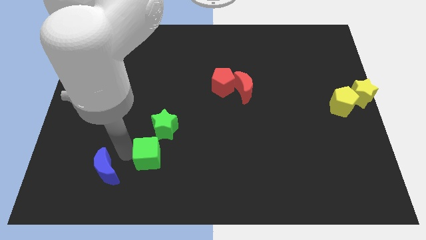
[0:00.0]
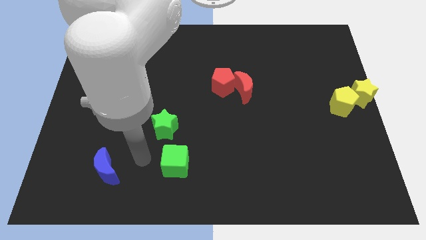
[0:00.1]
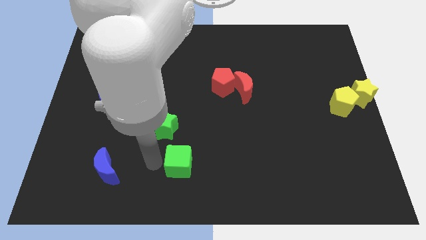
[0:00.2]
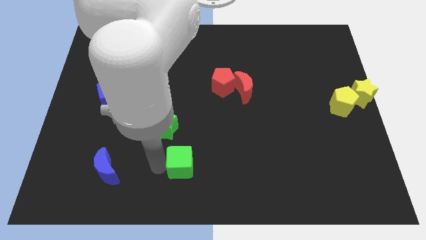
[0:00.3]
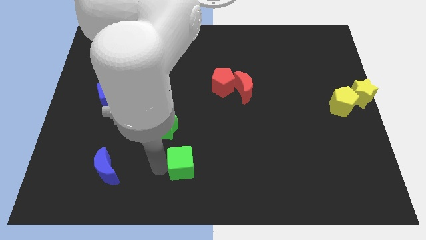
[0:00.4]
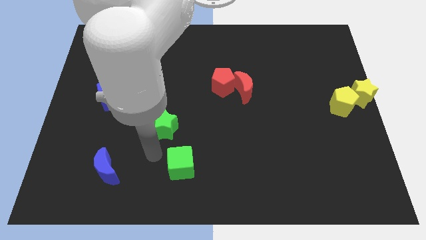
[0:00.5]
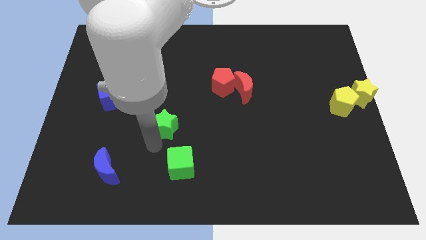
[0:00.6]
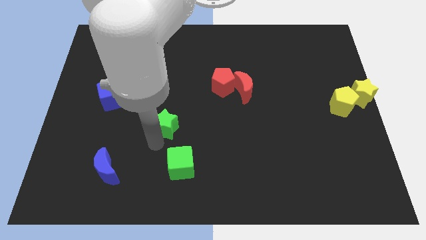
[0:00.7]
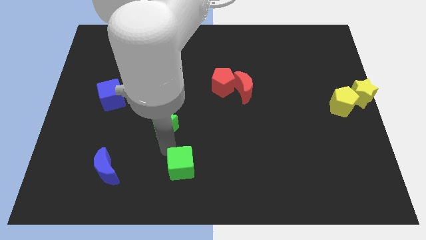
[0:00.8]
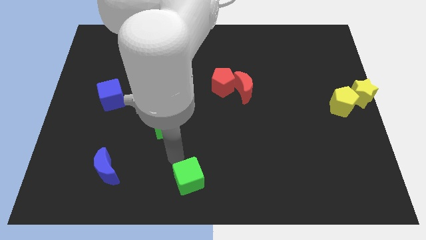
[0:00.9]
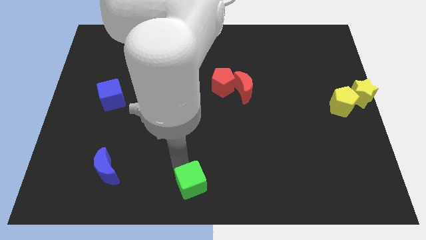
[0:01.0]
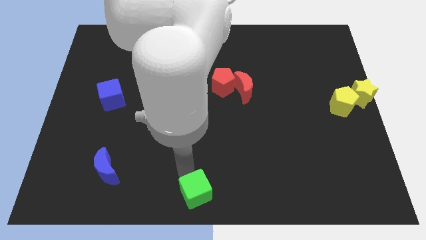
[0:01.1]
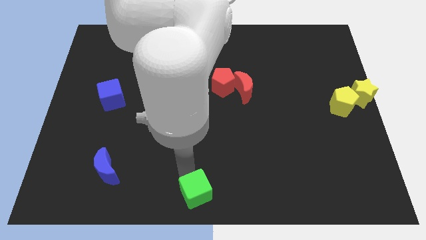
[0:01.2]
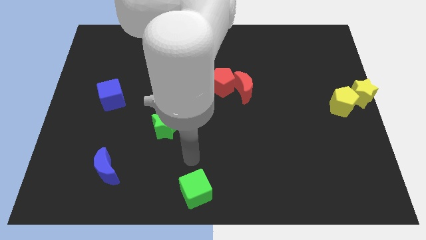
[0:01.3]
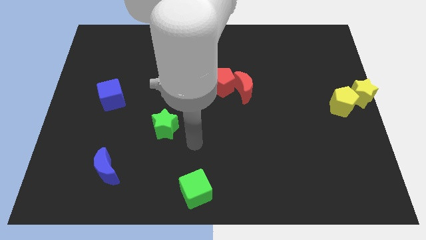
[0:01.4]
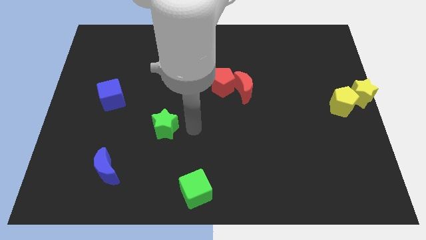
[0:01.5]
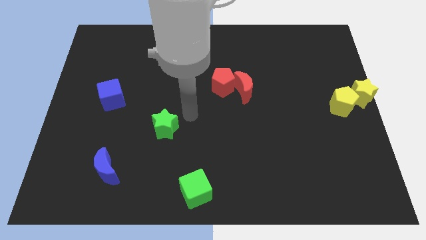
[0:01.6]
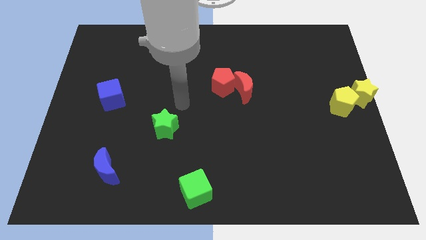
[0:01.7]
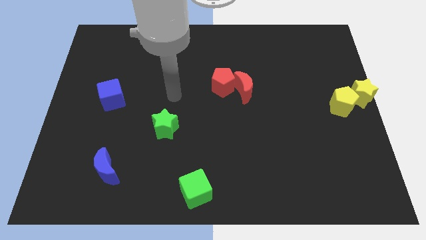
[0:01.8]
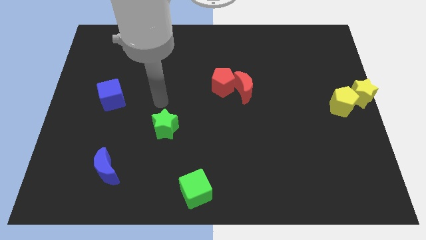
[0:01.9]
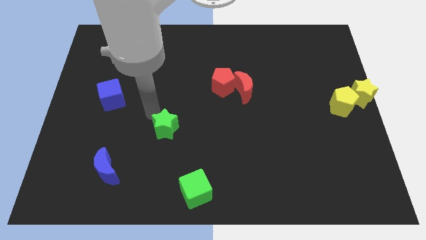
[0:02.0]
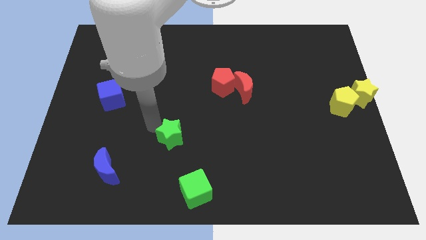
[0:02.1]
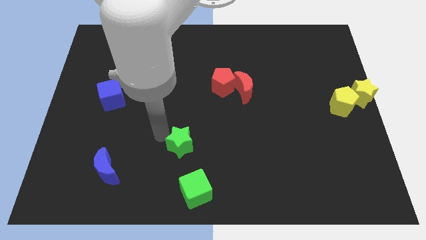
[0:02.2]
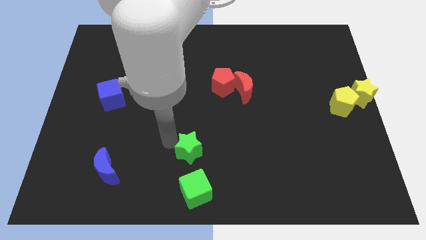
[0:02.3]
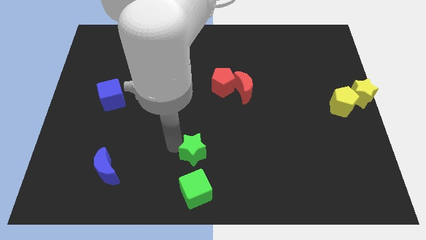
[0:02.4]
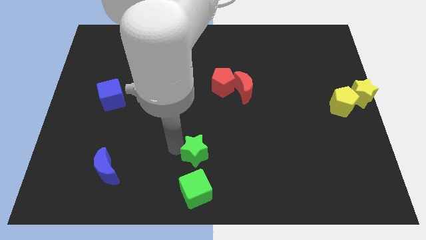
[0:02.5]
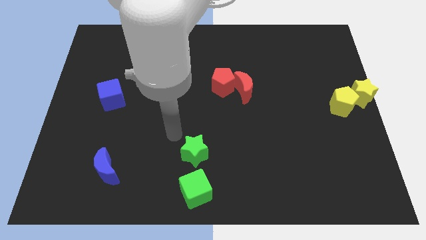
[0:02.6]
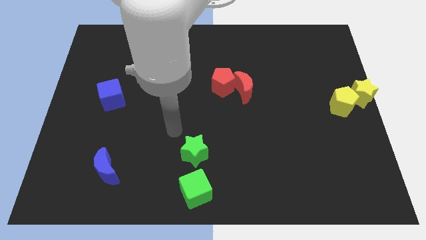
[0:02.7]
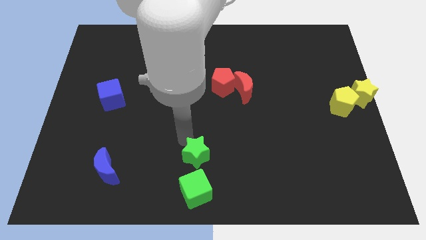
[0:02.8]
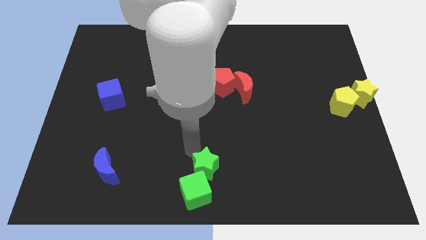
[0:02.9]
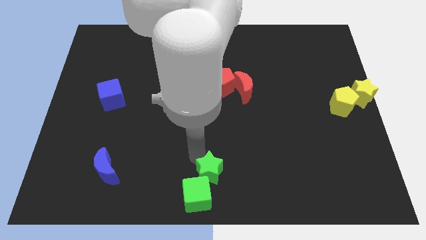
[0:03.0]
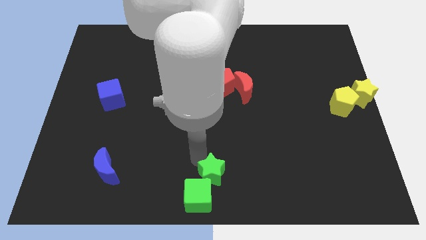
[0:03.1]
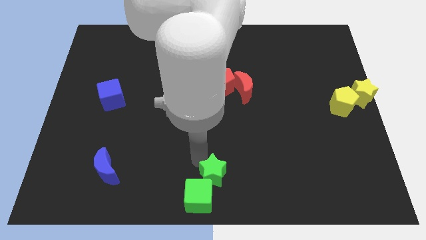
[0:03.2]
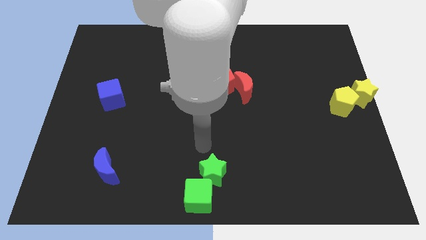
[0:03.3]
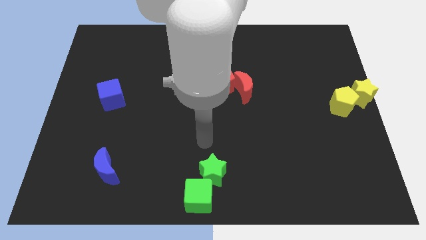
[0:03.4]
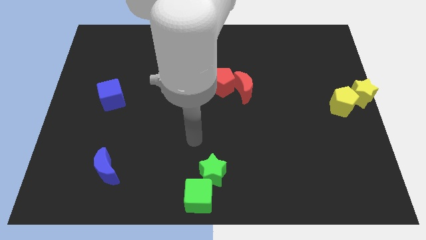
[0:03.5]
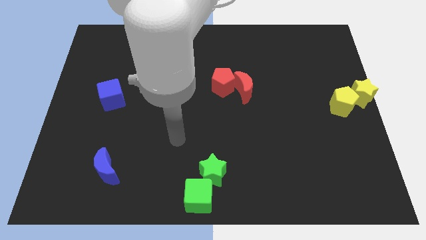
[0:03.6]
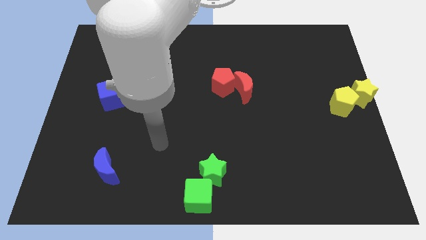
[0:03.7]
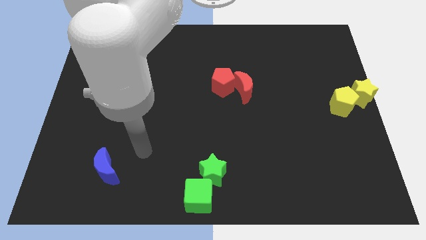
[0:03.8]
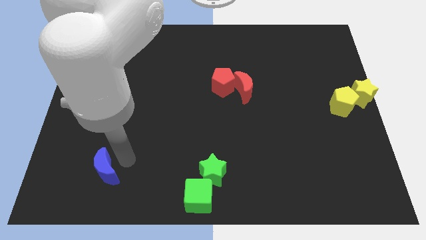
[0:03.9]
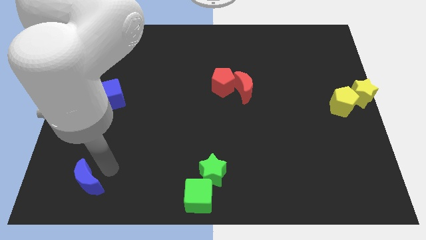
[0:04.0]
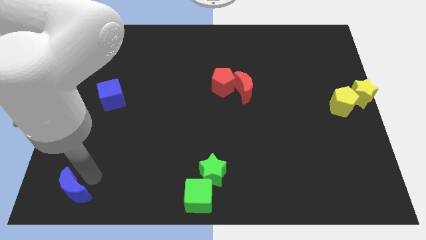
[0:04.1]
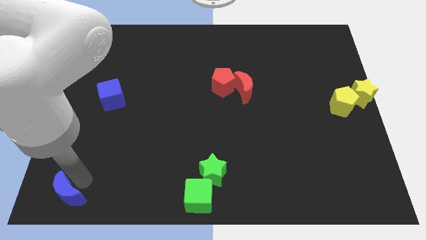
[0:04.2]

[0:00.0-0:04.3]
move the green blocks to the bottom center of the board

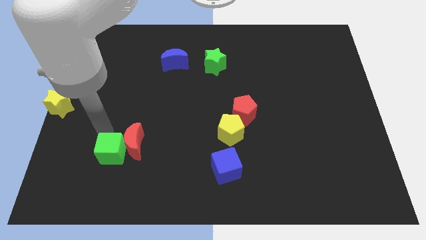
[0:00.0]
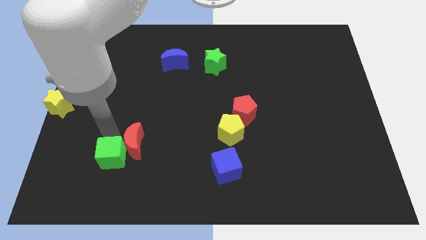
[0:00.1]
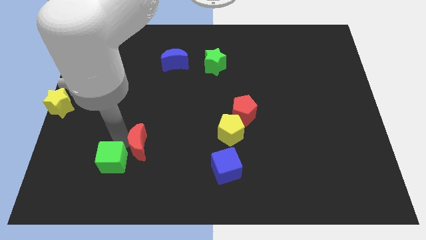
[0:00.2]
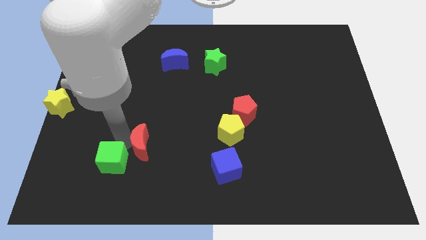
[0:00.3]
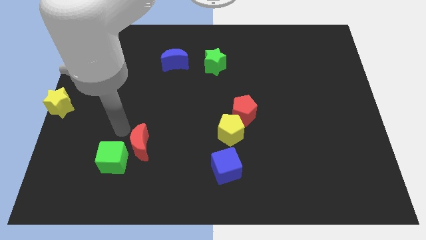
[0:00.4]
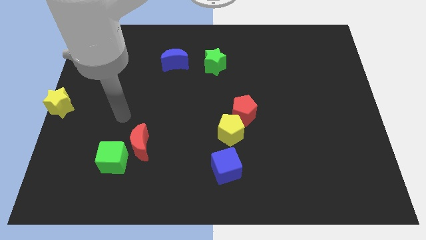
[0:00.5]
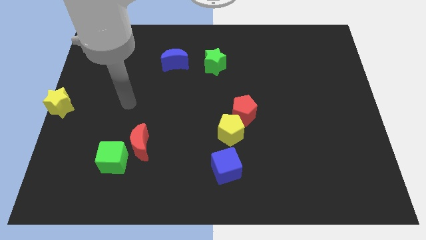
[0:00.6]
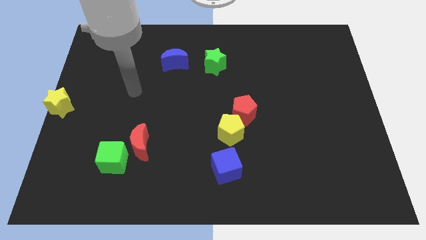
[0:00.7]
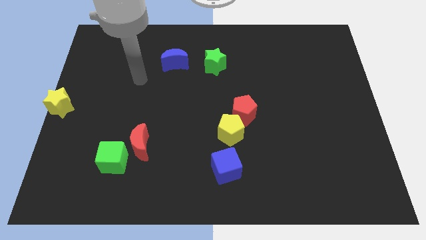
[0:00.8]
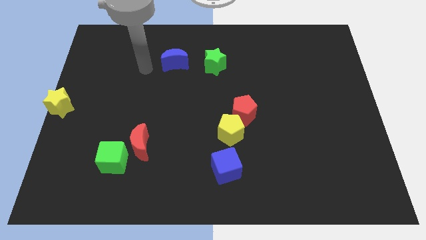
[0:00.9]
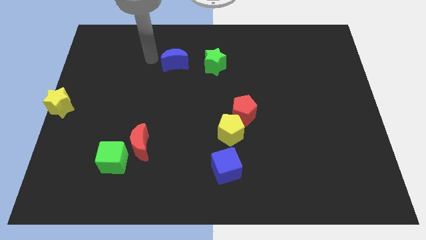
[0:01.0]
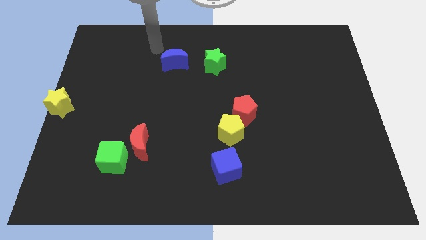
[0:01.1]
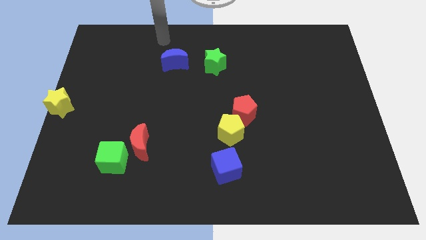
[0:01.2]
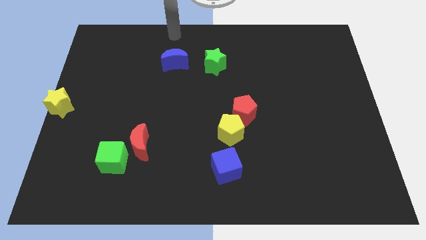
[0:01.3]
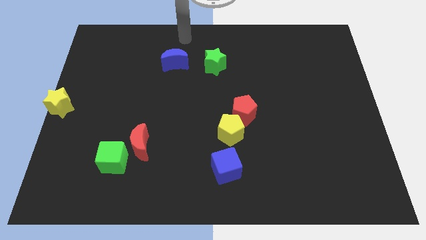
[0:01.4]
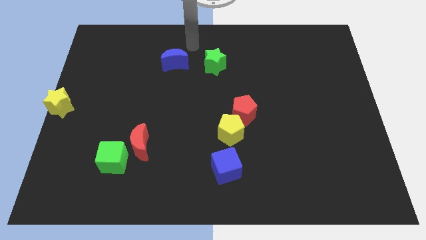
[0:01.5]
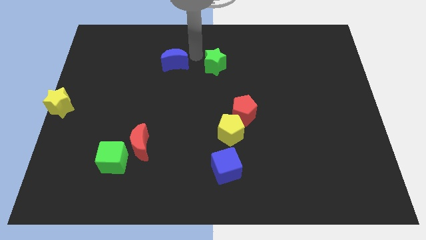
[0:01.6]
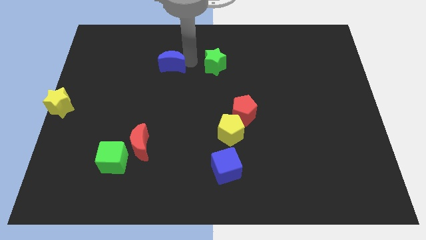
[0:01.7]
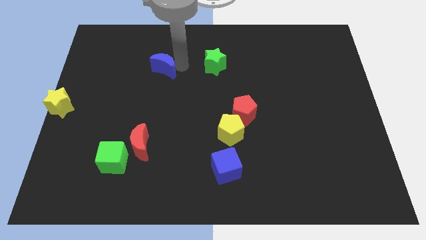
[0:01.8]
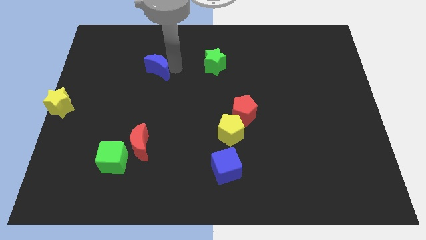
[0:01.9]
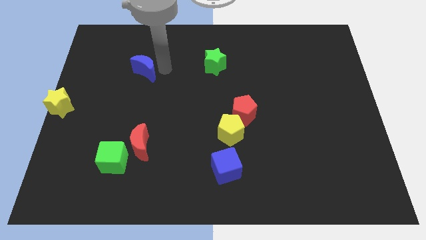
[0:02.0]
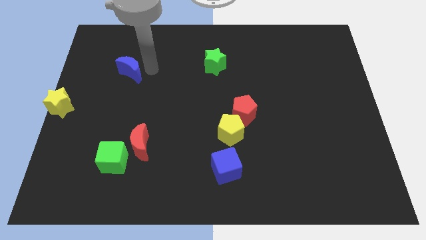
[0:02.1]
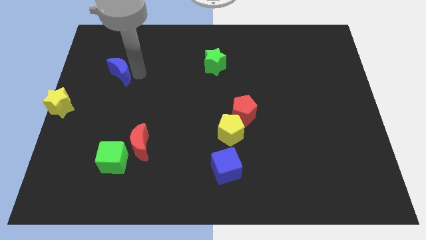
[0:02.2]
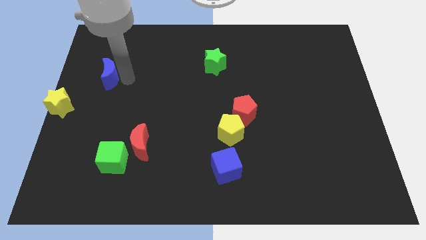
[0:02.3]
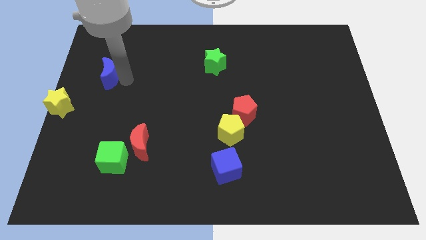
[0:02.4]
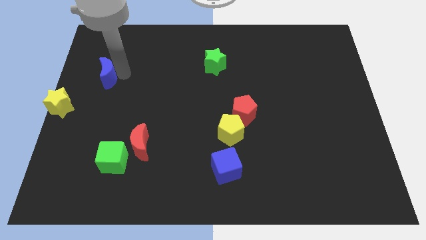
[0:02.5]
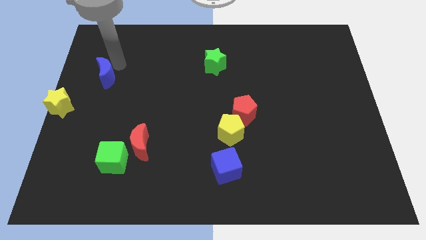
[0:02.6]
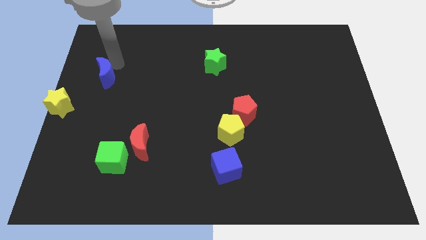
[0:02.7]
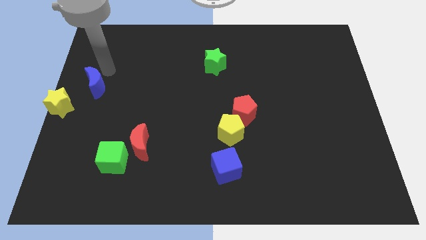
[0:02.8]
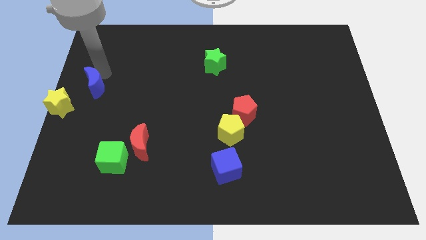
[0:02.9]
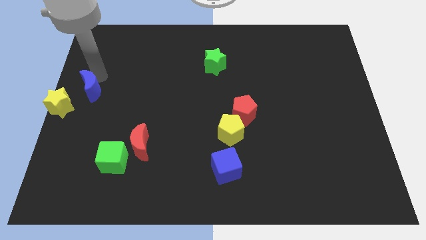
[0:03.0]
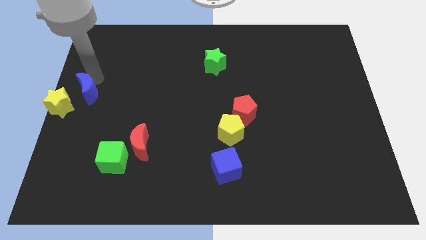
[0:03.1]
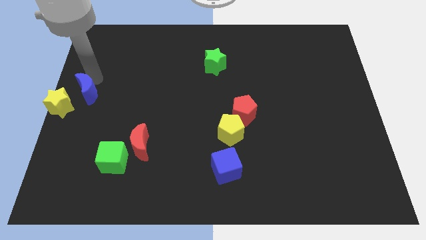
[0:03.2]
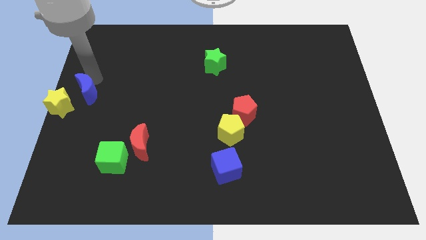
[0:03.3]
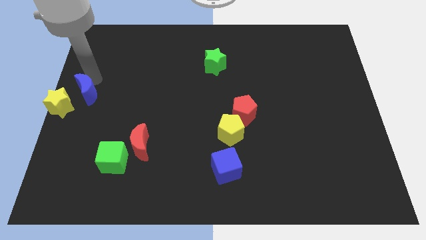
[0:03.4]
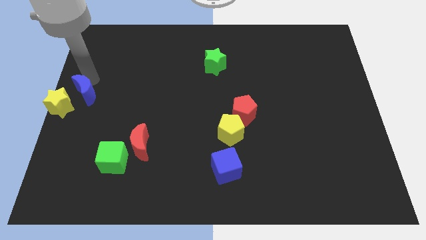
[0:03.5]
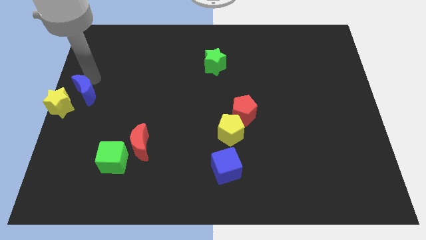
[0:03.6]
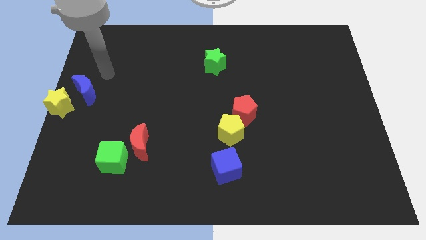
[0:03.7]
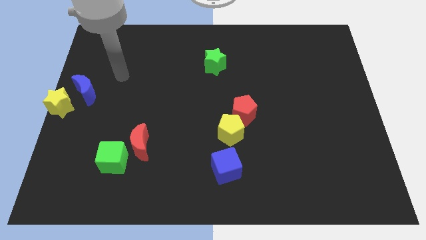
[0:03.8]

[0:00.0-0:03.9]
move the blue moon diagonal top right to yellow star

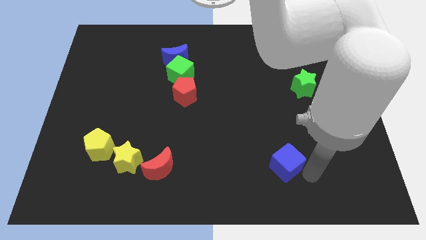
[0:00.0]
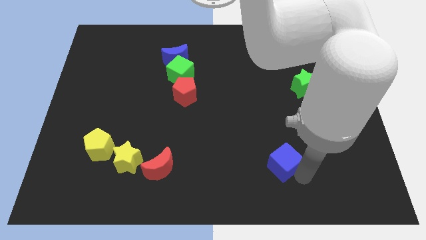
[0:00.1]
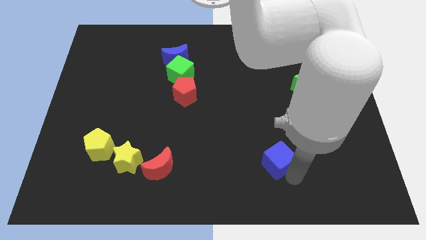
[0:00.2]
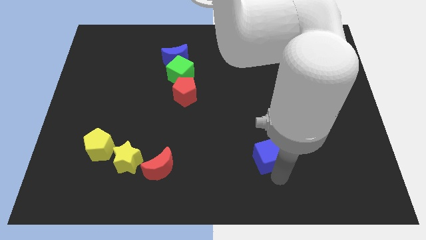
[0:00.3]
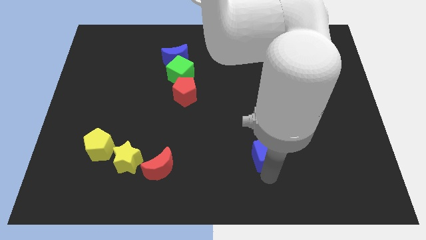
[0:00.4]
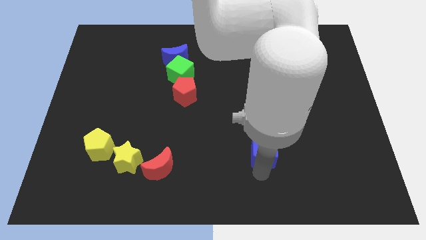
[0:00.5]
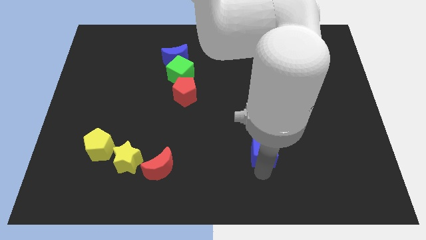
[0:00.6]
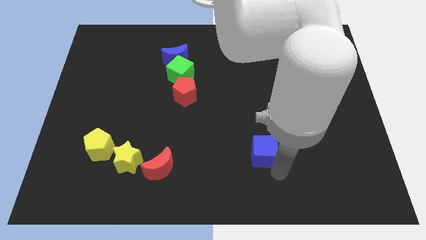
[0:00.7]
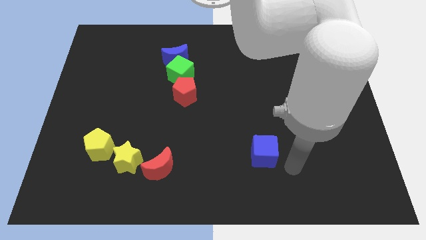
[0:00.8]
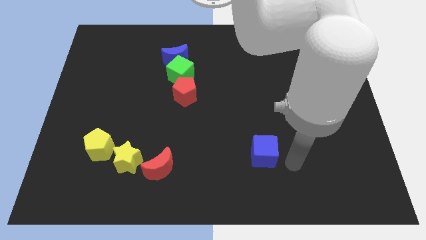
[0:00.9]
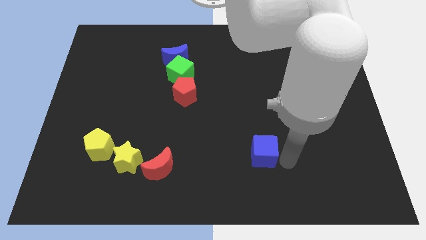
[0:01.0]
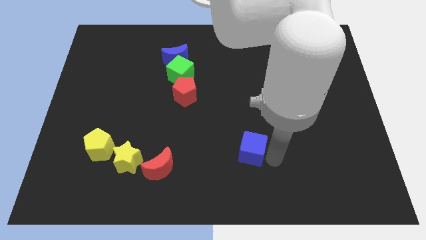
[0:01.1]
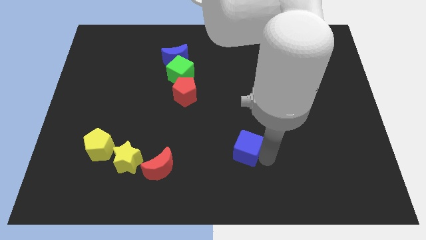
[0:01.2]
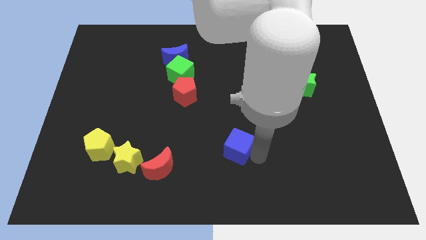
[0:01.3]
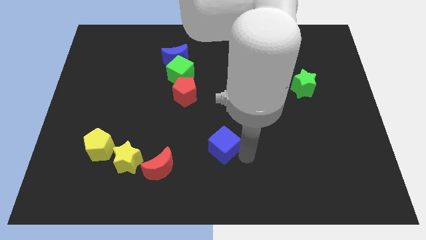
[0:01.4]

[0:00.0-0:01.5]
move the blue cube towards the left
